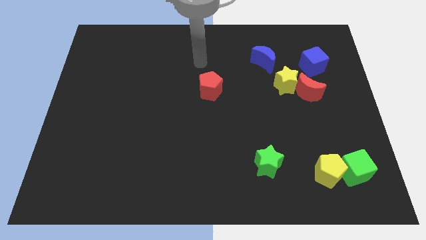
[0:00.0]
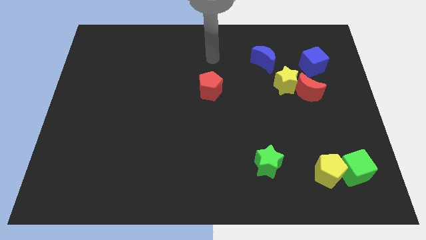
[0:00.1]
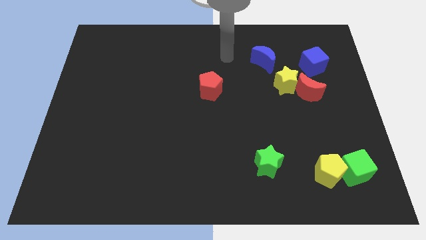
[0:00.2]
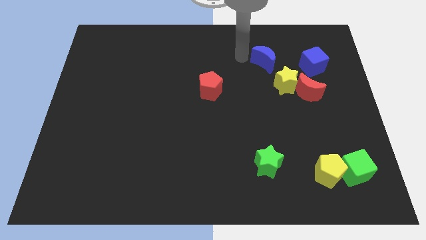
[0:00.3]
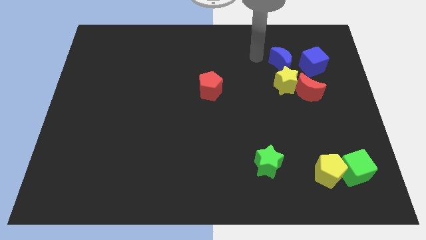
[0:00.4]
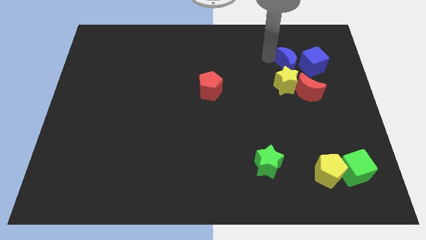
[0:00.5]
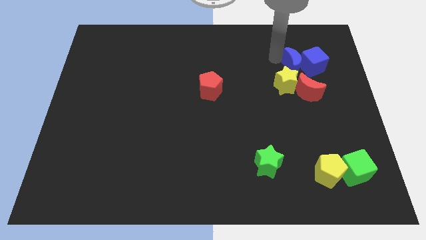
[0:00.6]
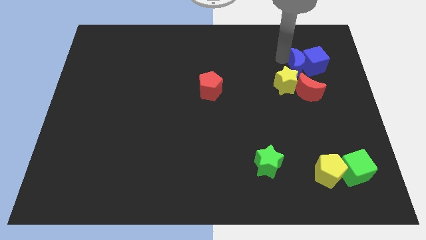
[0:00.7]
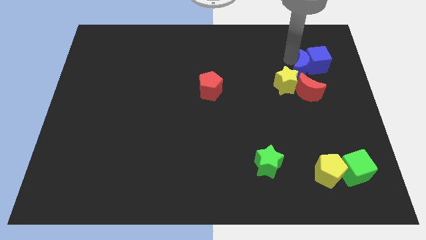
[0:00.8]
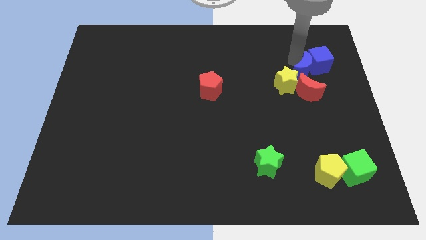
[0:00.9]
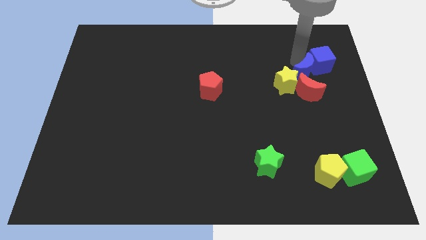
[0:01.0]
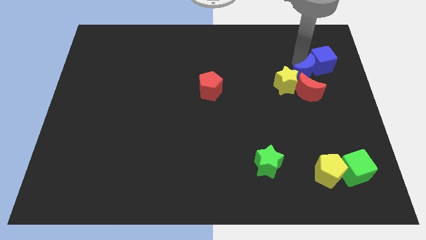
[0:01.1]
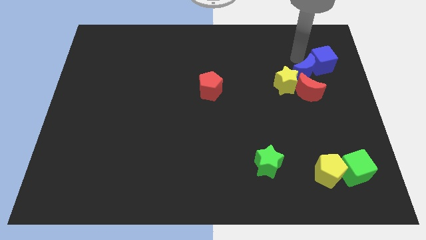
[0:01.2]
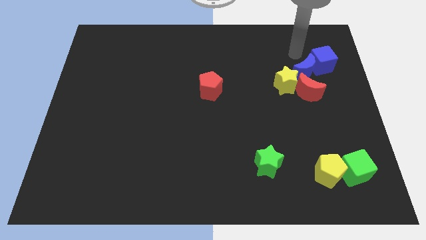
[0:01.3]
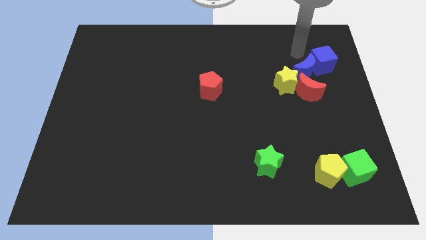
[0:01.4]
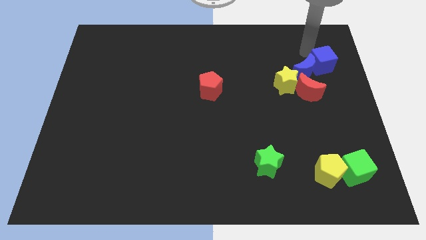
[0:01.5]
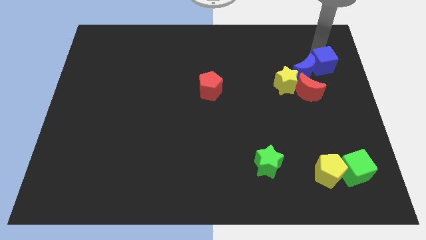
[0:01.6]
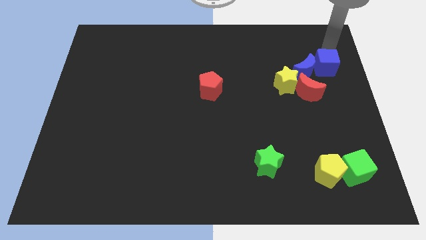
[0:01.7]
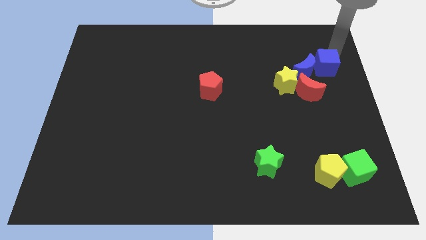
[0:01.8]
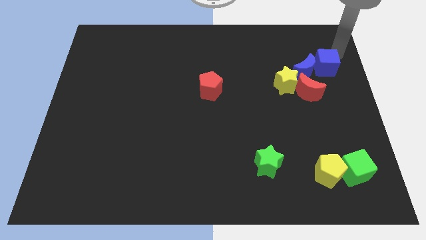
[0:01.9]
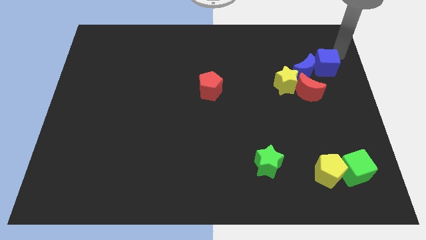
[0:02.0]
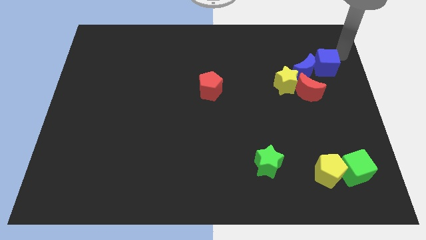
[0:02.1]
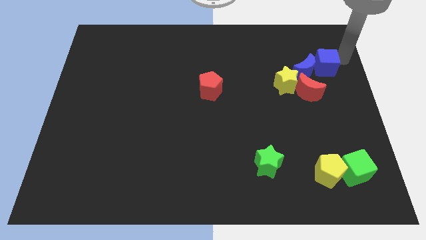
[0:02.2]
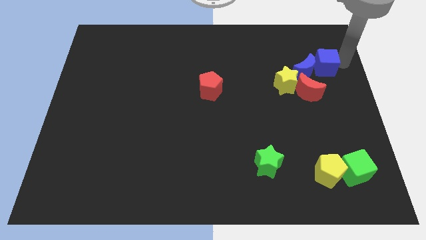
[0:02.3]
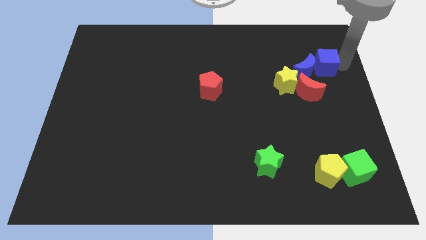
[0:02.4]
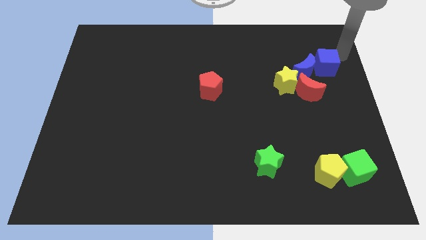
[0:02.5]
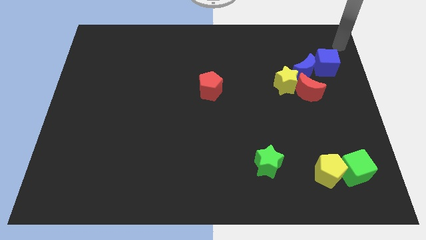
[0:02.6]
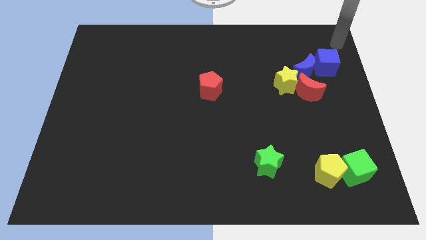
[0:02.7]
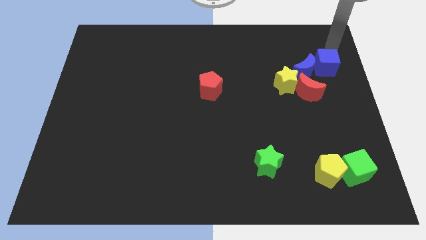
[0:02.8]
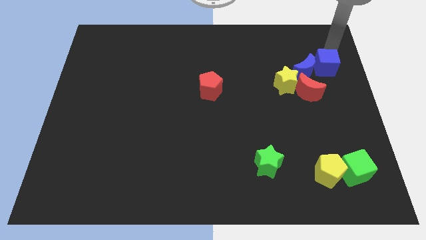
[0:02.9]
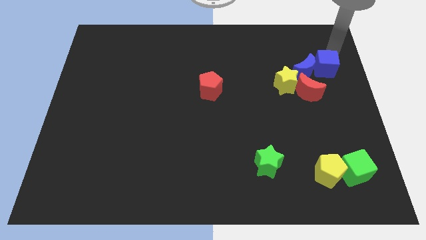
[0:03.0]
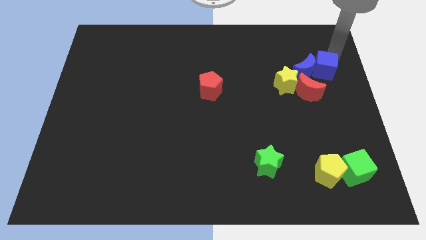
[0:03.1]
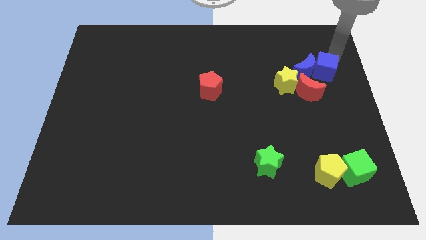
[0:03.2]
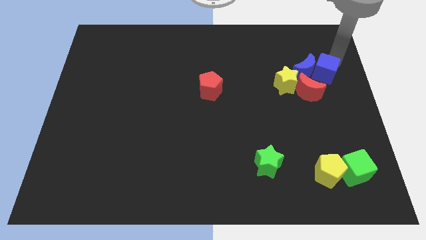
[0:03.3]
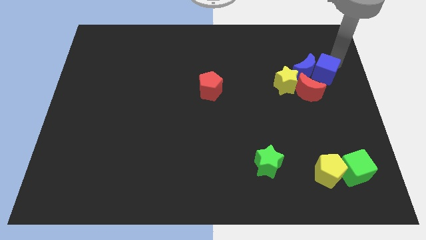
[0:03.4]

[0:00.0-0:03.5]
push blue crescent into blue cube

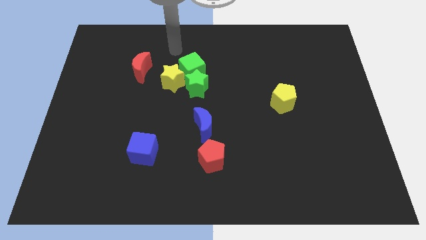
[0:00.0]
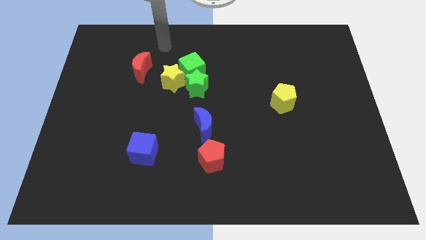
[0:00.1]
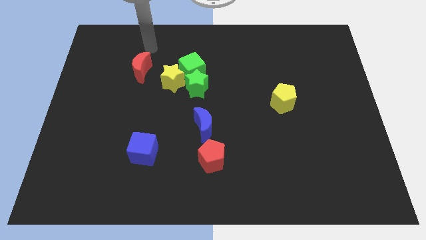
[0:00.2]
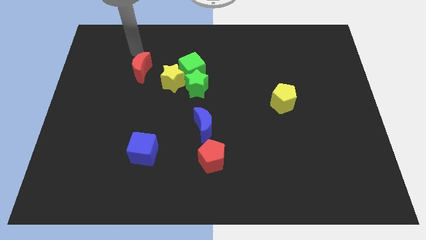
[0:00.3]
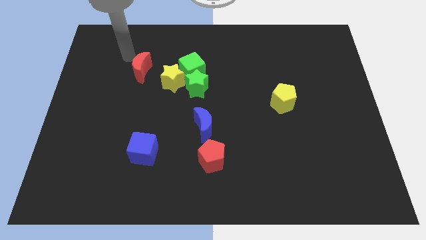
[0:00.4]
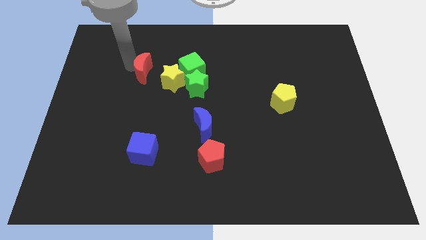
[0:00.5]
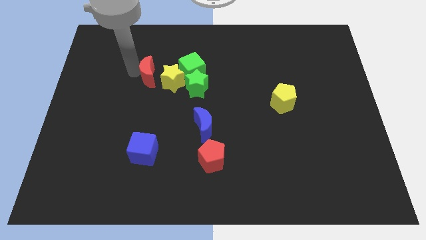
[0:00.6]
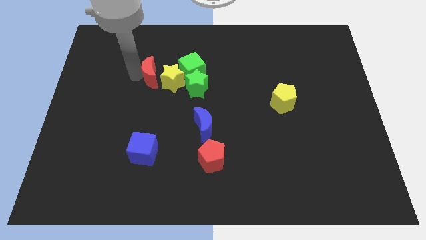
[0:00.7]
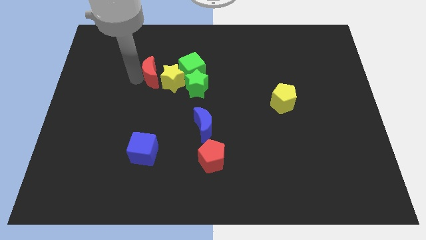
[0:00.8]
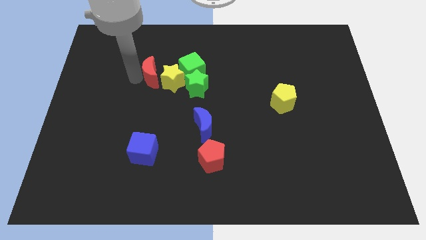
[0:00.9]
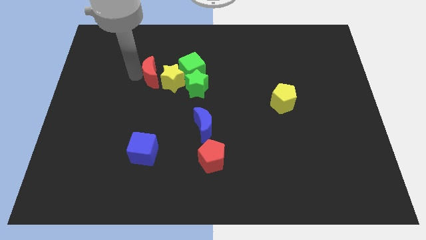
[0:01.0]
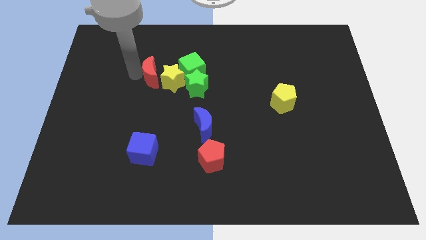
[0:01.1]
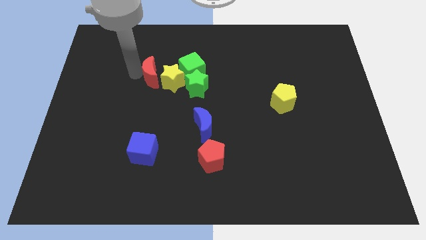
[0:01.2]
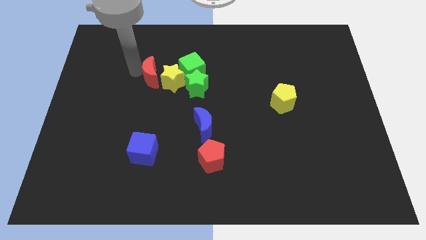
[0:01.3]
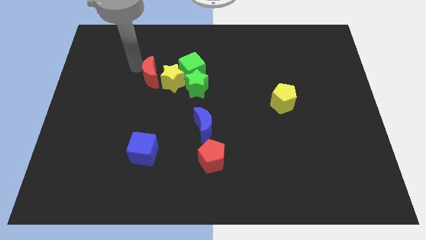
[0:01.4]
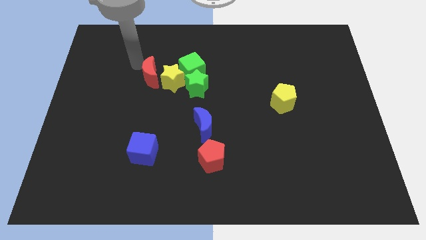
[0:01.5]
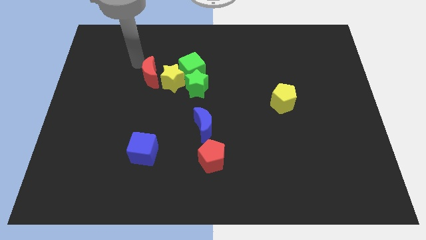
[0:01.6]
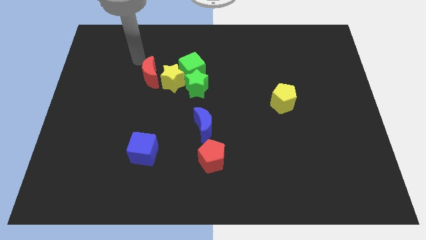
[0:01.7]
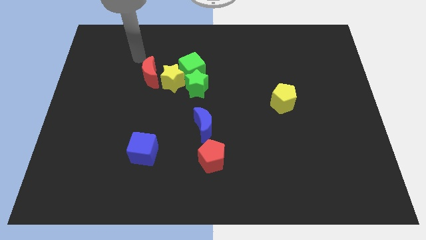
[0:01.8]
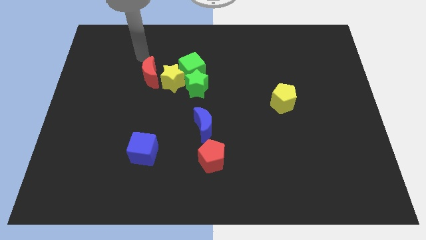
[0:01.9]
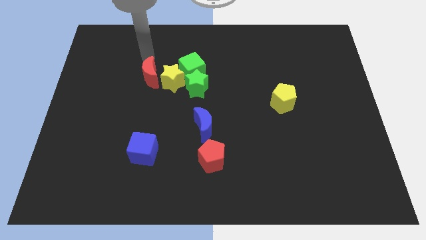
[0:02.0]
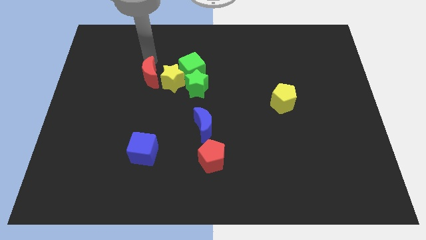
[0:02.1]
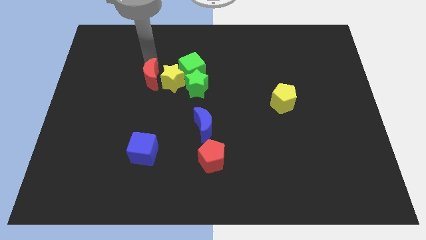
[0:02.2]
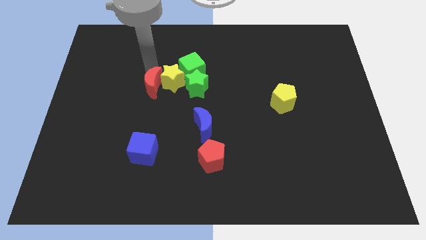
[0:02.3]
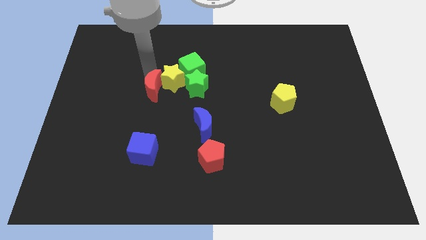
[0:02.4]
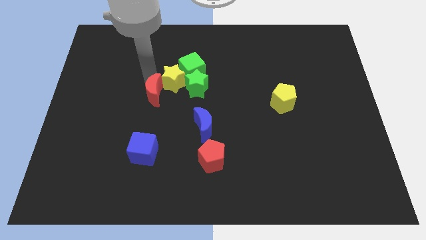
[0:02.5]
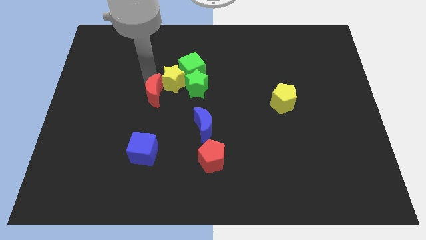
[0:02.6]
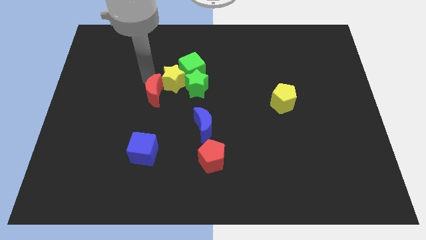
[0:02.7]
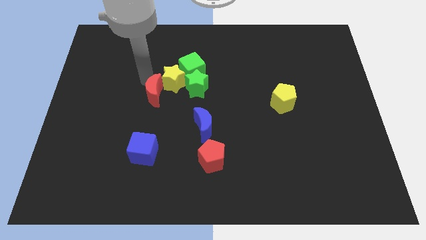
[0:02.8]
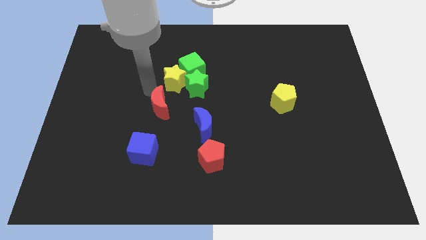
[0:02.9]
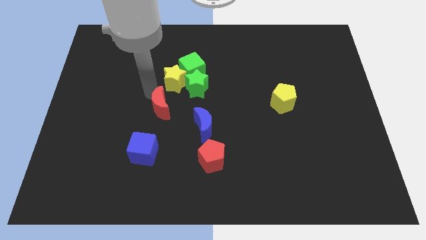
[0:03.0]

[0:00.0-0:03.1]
slide red moon below yellow star

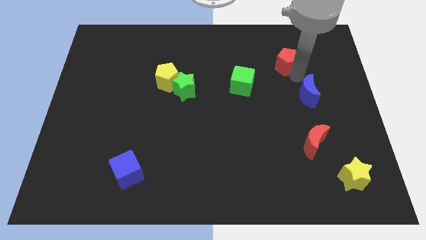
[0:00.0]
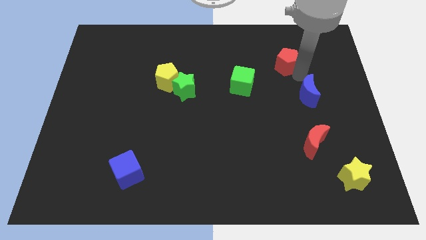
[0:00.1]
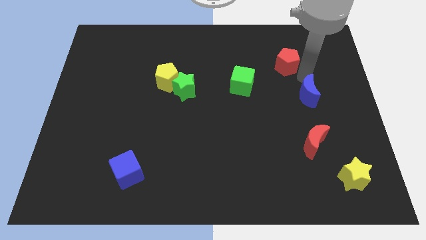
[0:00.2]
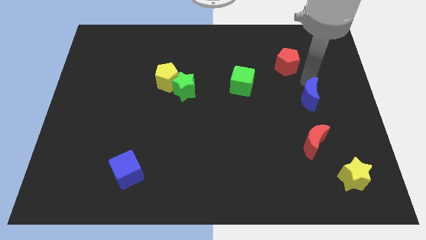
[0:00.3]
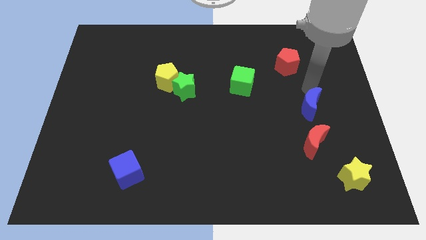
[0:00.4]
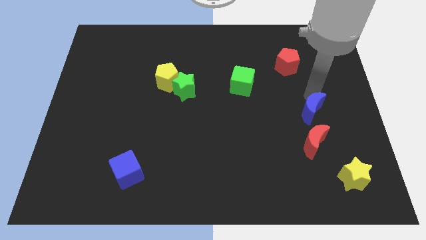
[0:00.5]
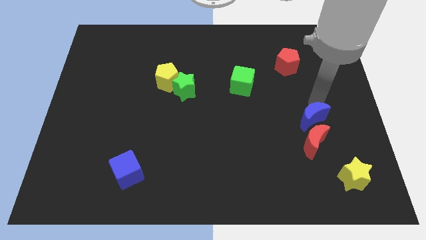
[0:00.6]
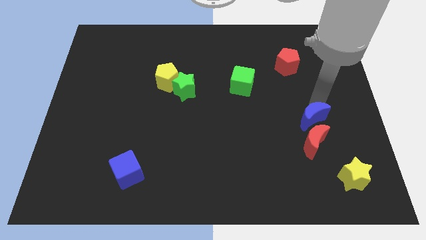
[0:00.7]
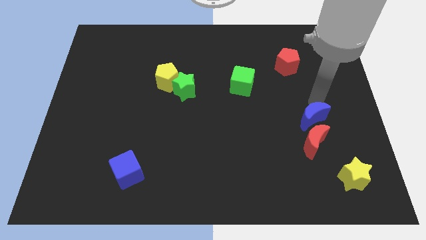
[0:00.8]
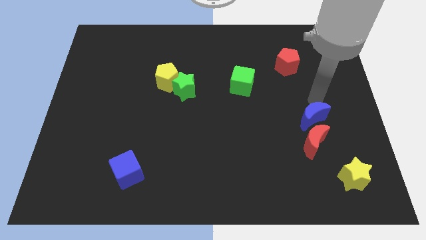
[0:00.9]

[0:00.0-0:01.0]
move the blue crescent above the red crescent

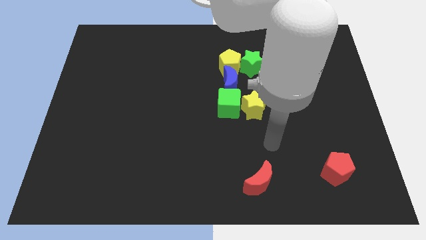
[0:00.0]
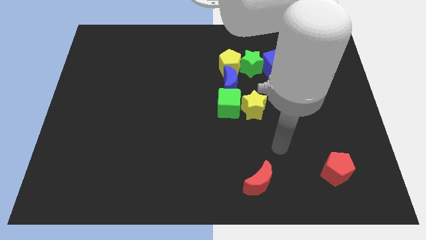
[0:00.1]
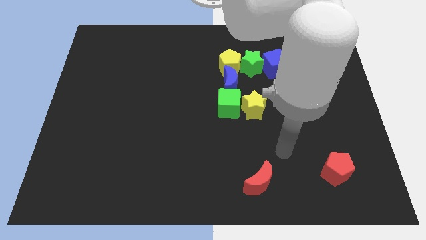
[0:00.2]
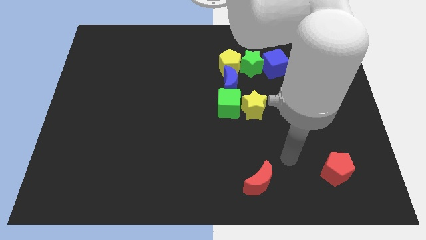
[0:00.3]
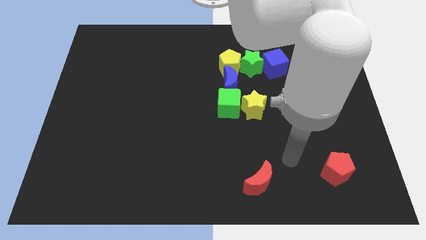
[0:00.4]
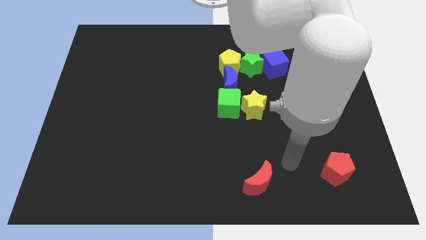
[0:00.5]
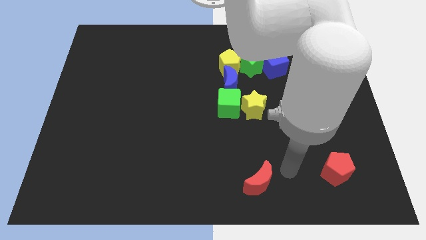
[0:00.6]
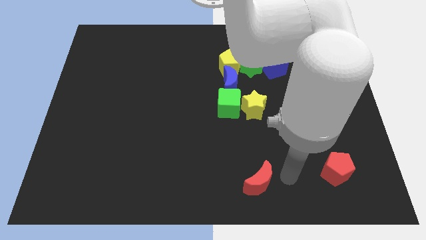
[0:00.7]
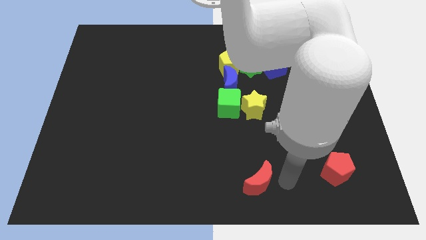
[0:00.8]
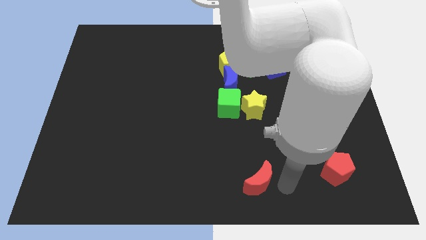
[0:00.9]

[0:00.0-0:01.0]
move the arm right to the red crescent

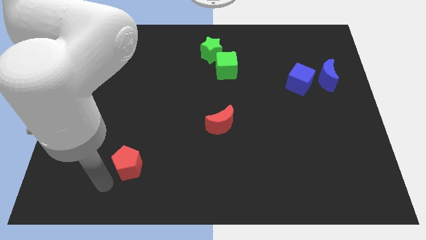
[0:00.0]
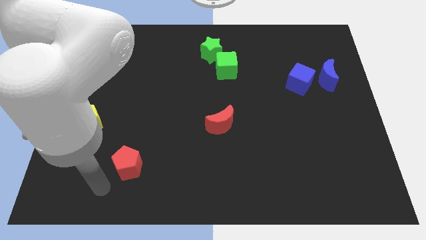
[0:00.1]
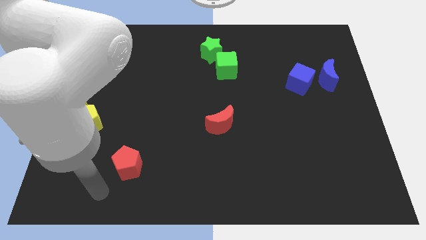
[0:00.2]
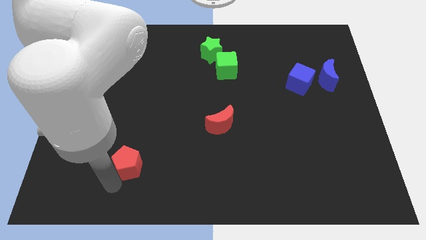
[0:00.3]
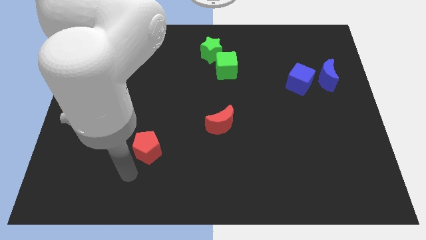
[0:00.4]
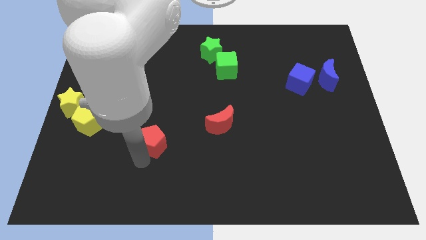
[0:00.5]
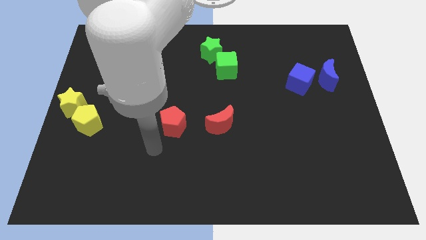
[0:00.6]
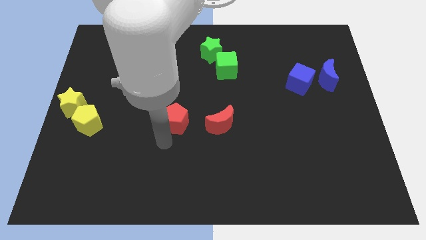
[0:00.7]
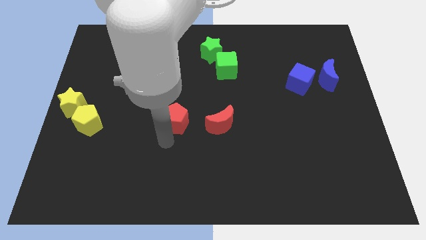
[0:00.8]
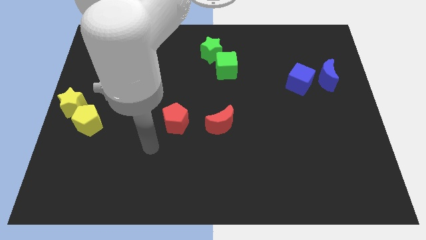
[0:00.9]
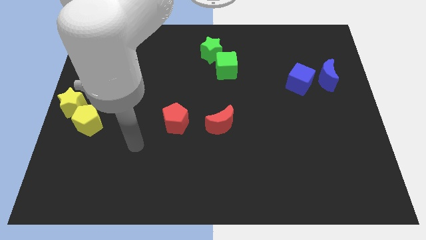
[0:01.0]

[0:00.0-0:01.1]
move the red pentagon to the left side of the red crescent
